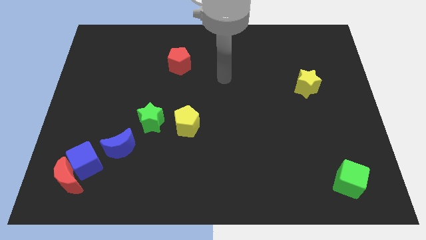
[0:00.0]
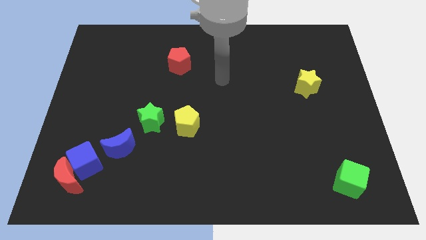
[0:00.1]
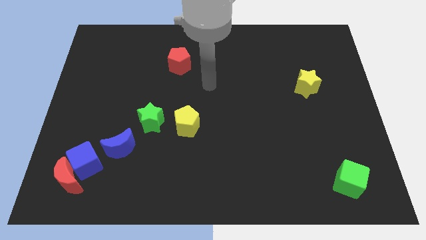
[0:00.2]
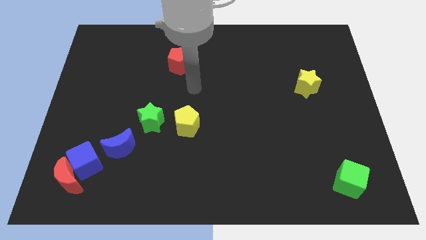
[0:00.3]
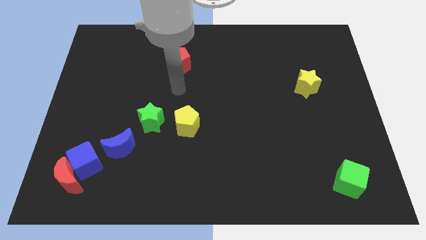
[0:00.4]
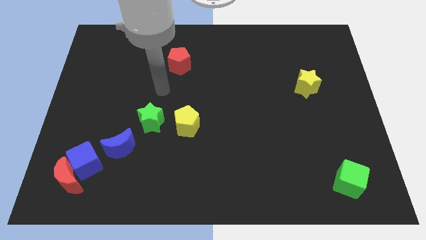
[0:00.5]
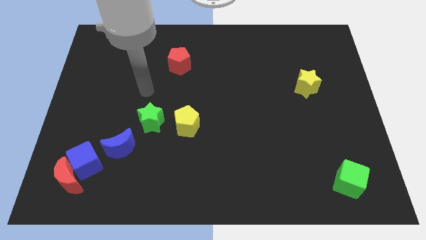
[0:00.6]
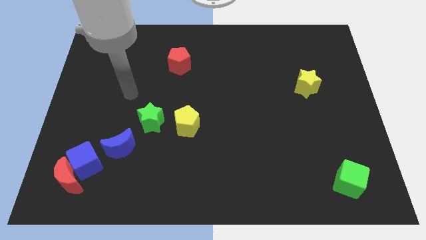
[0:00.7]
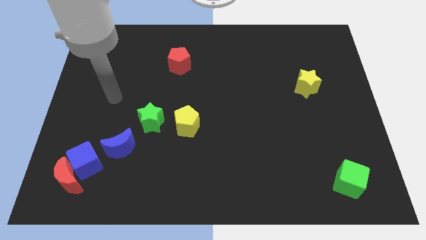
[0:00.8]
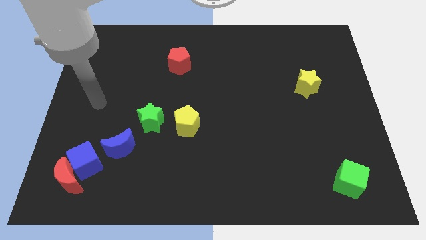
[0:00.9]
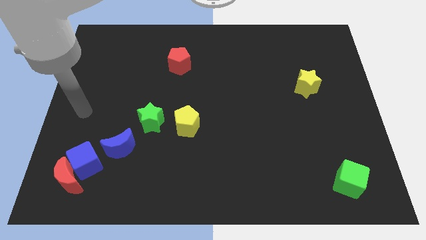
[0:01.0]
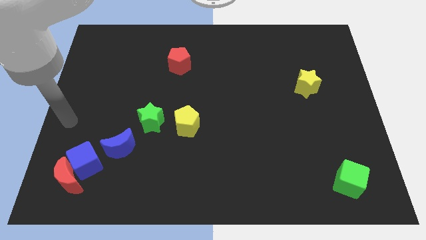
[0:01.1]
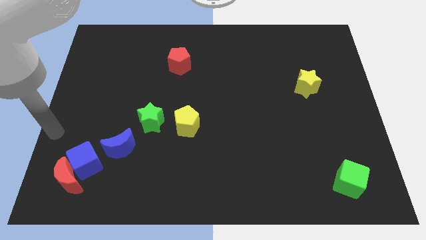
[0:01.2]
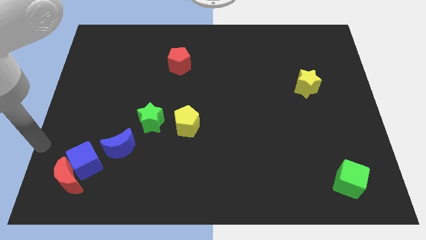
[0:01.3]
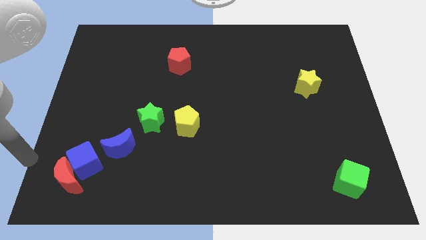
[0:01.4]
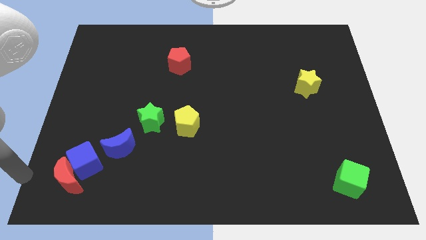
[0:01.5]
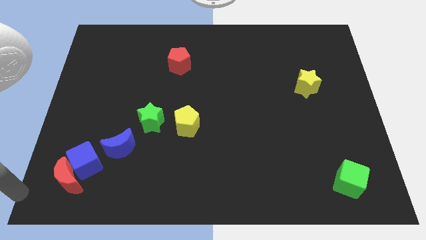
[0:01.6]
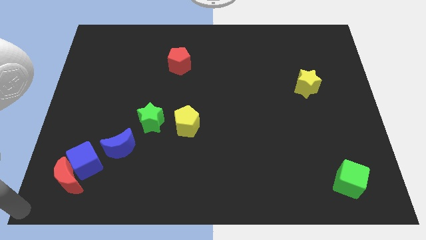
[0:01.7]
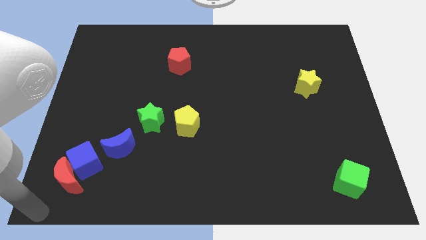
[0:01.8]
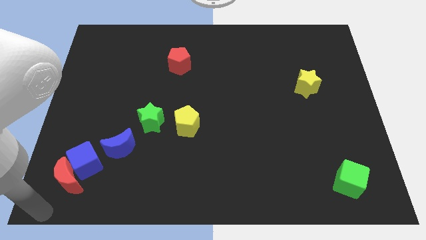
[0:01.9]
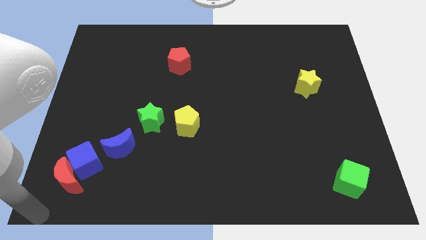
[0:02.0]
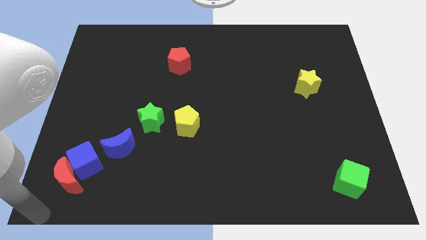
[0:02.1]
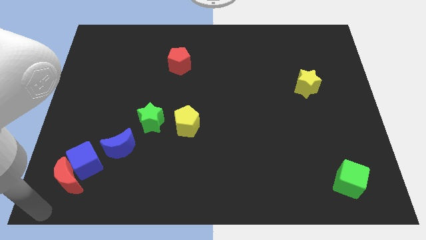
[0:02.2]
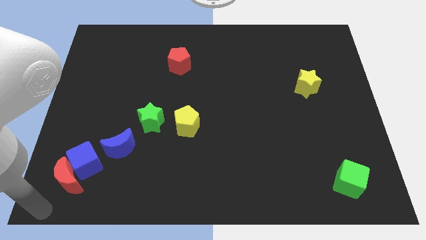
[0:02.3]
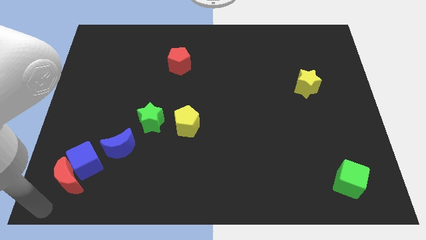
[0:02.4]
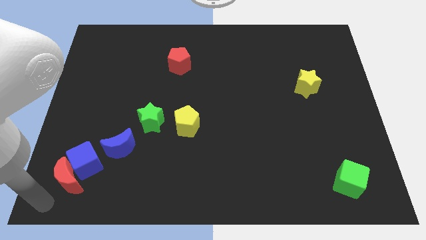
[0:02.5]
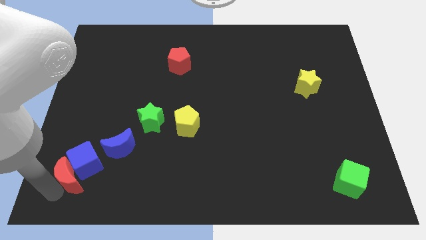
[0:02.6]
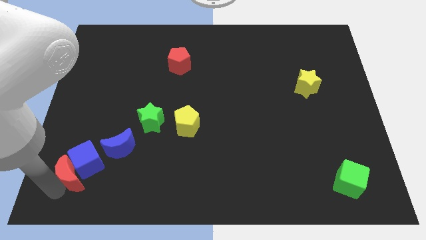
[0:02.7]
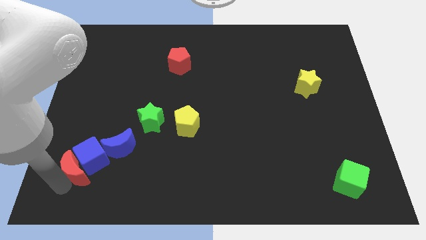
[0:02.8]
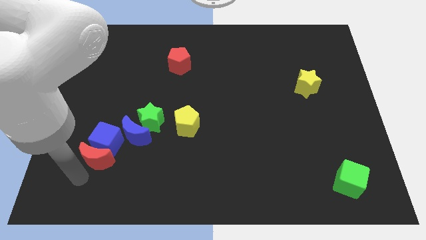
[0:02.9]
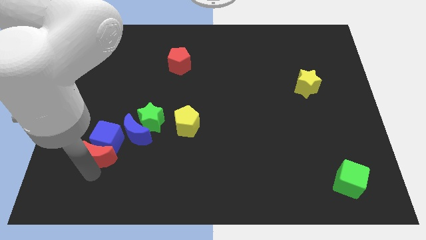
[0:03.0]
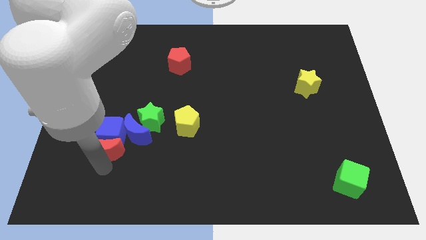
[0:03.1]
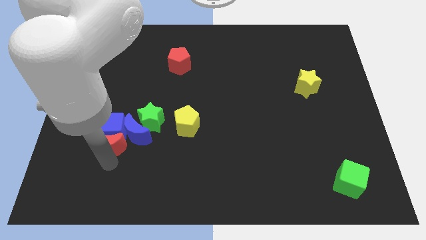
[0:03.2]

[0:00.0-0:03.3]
push a group of blocks upward

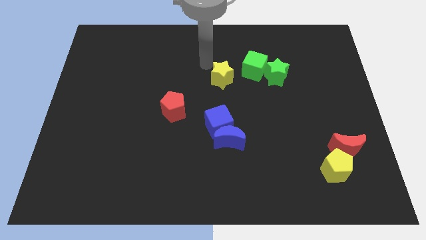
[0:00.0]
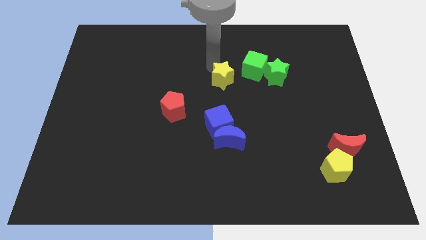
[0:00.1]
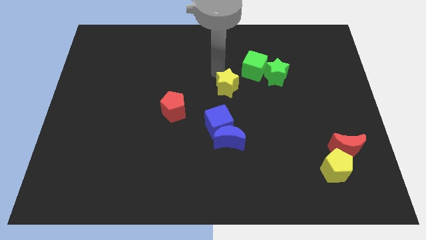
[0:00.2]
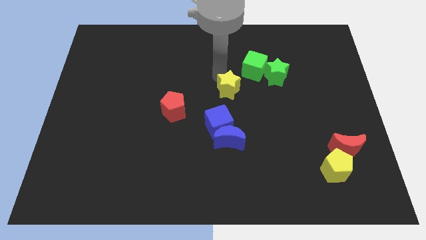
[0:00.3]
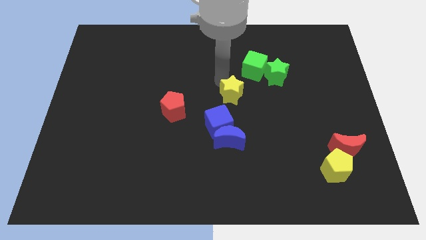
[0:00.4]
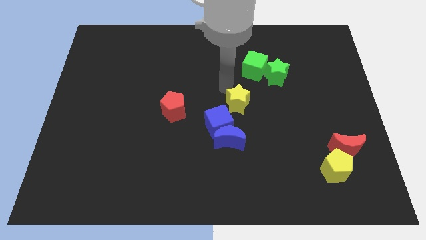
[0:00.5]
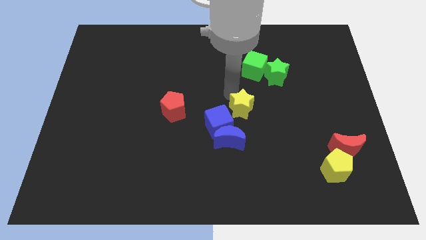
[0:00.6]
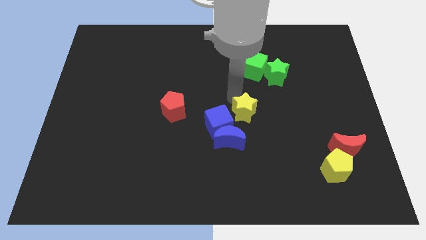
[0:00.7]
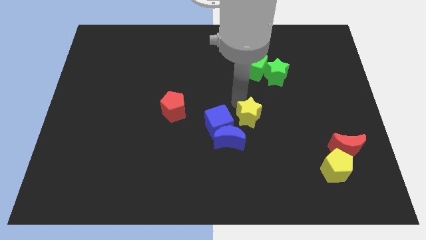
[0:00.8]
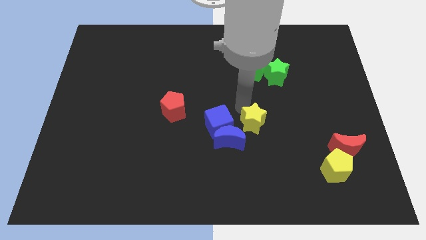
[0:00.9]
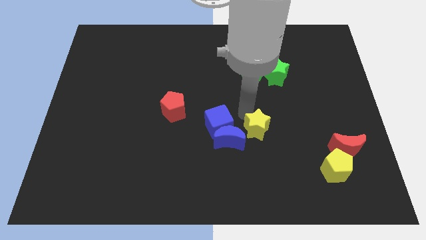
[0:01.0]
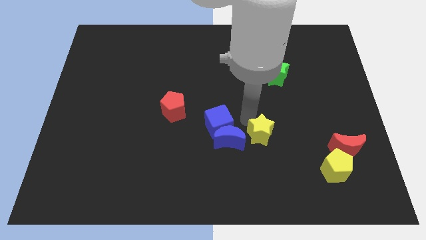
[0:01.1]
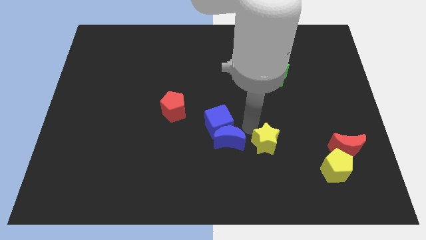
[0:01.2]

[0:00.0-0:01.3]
push the yellow star to the right side of the group of blue blocks

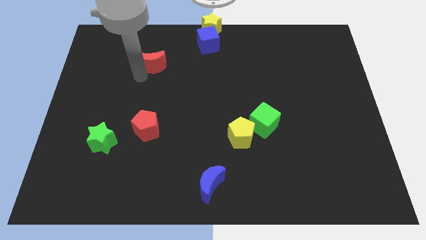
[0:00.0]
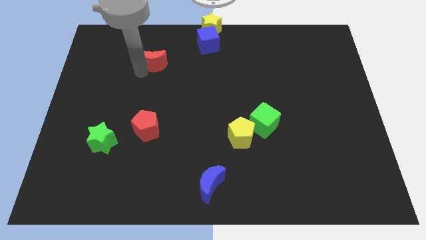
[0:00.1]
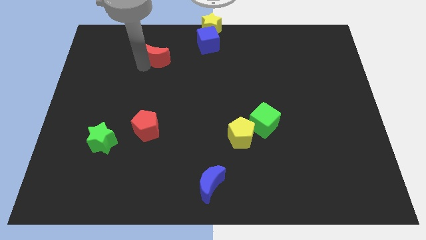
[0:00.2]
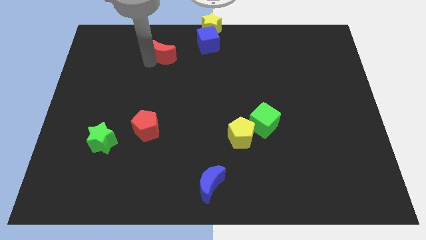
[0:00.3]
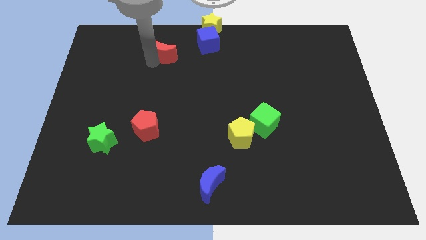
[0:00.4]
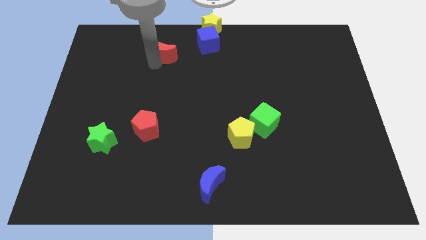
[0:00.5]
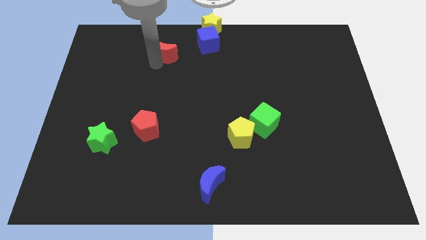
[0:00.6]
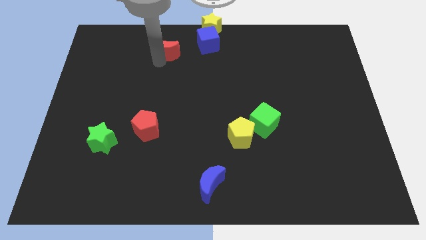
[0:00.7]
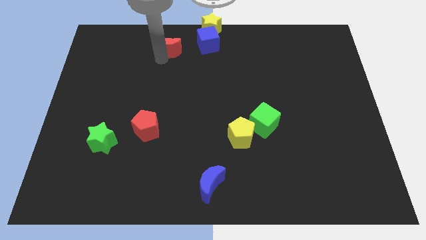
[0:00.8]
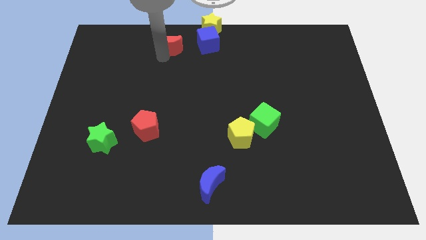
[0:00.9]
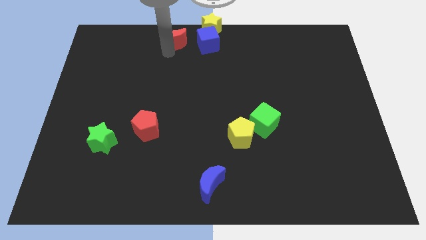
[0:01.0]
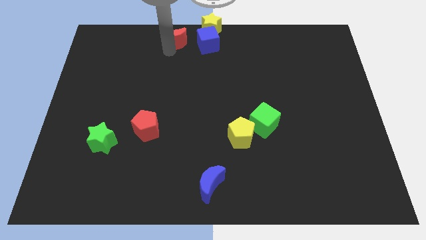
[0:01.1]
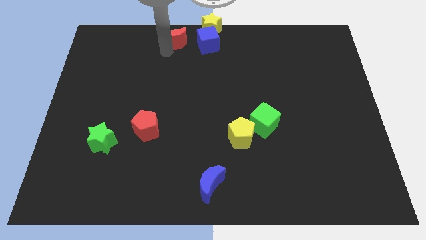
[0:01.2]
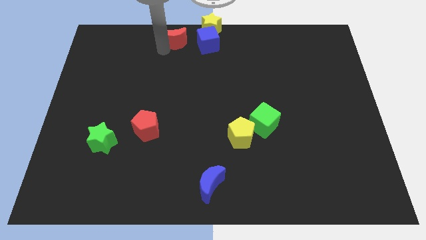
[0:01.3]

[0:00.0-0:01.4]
push the red crescent towards the top center of the board

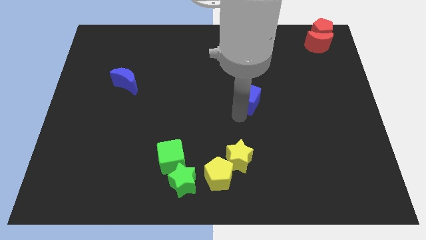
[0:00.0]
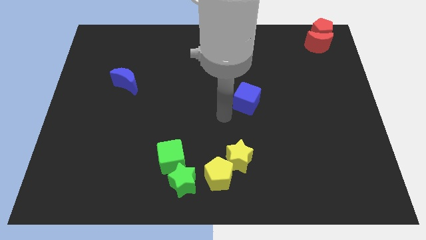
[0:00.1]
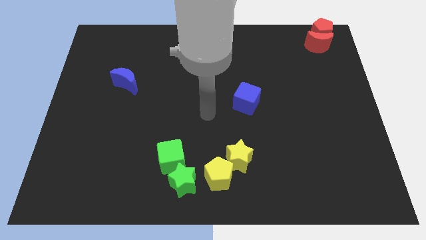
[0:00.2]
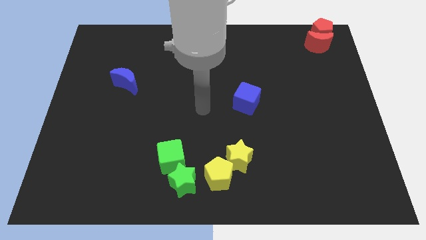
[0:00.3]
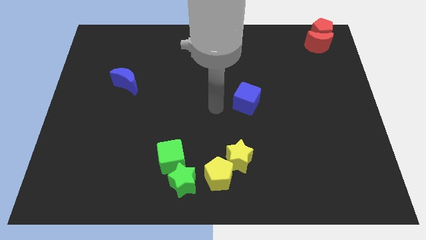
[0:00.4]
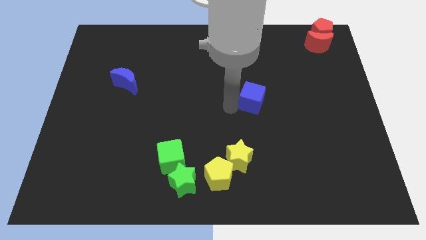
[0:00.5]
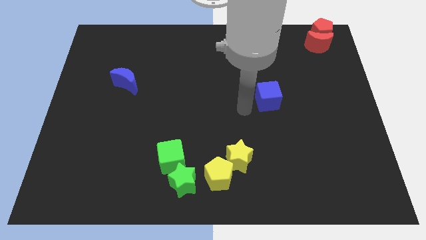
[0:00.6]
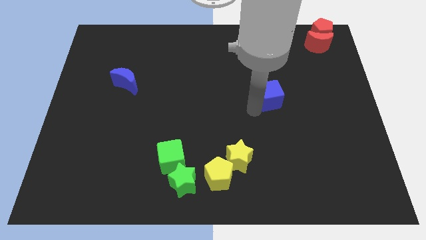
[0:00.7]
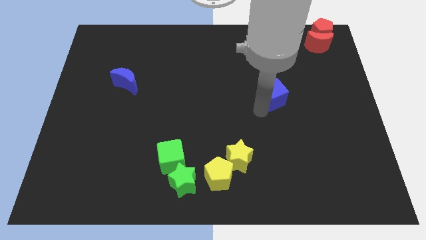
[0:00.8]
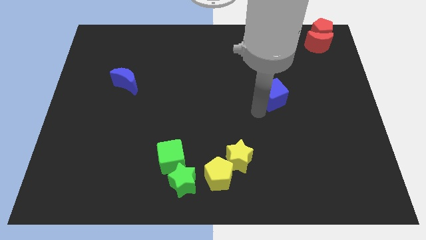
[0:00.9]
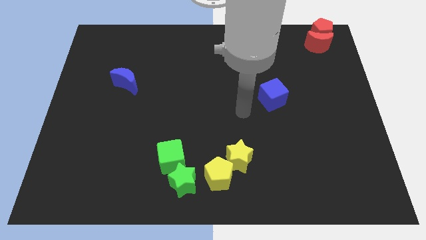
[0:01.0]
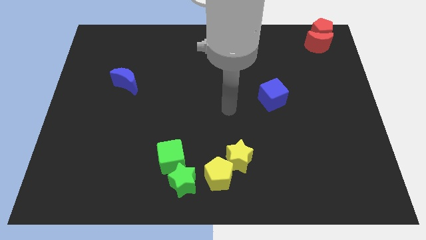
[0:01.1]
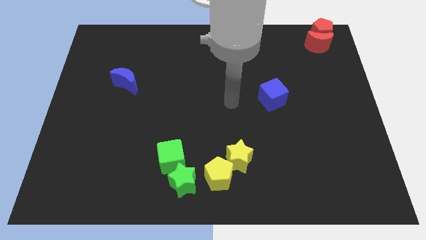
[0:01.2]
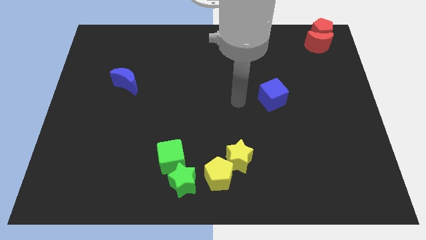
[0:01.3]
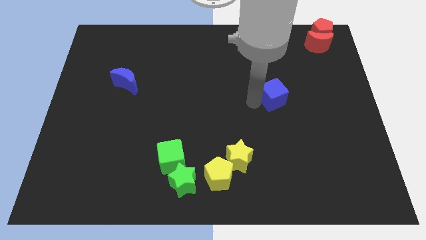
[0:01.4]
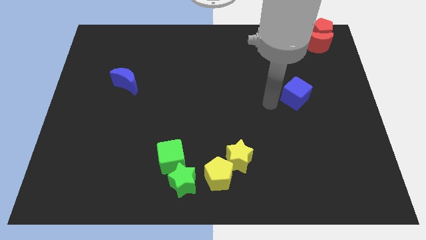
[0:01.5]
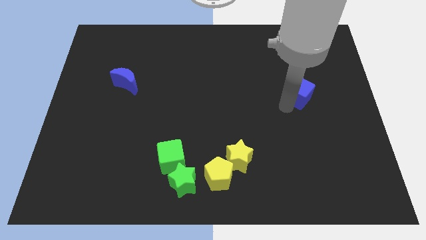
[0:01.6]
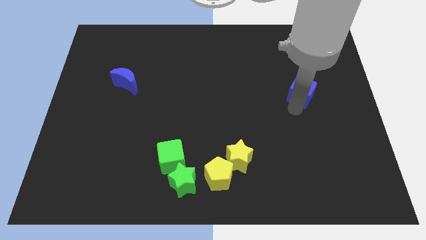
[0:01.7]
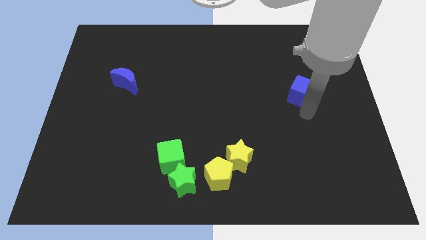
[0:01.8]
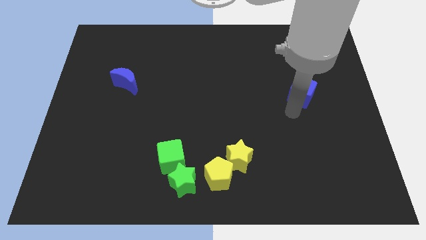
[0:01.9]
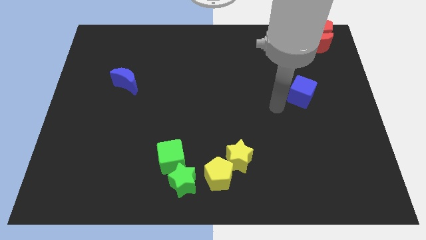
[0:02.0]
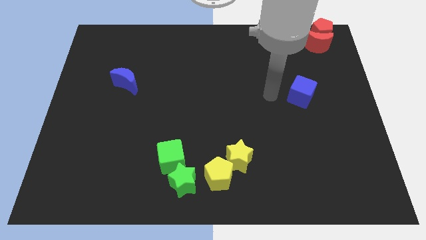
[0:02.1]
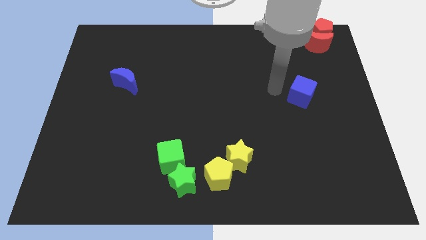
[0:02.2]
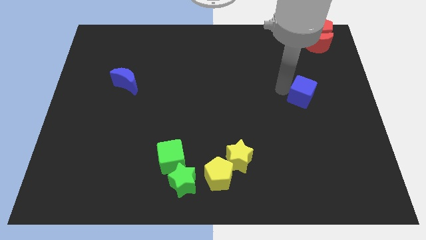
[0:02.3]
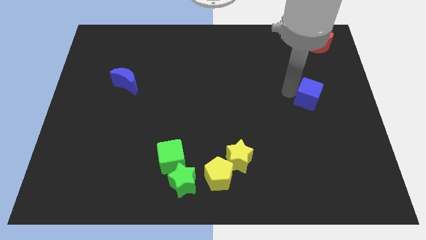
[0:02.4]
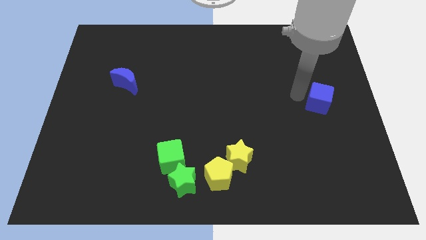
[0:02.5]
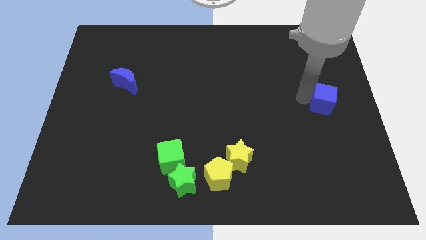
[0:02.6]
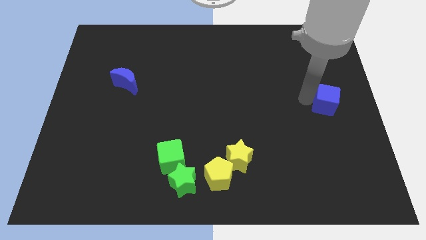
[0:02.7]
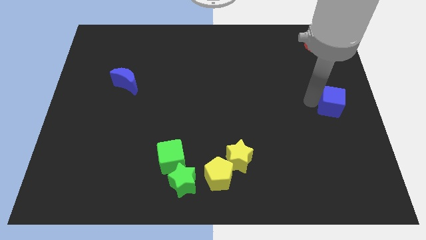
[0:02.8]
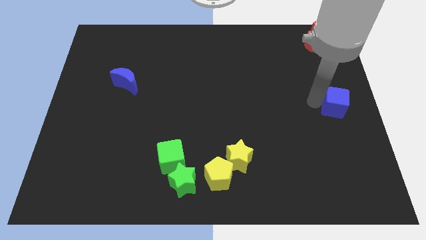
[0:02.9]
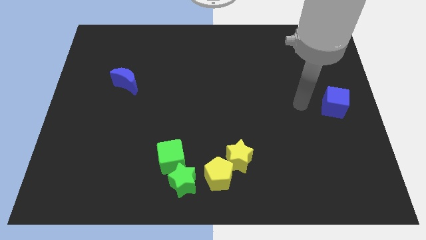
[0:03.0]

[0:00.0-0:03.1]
push the blue cube to the bottom of the red crescent
